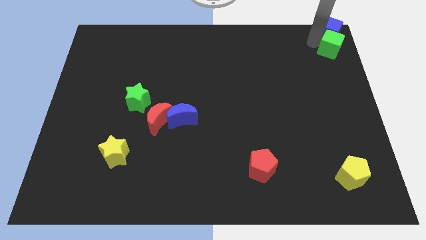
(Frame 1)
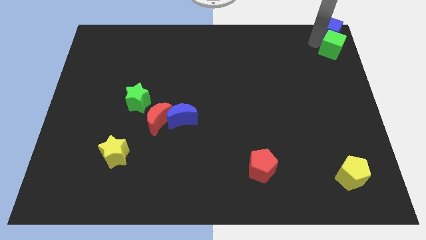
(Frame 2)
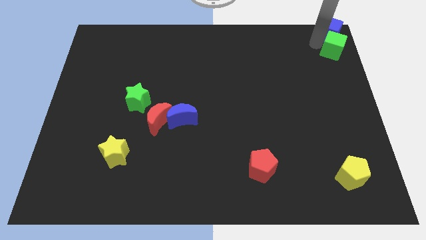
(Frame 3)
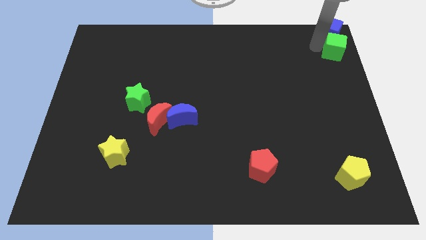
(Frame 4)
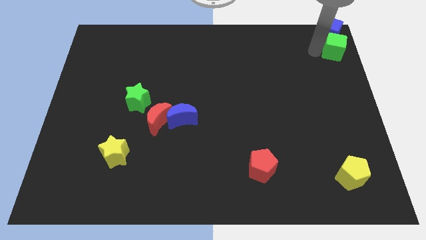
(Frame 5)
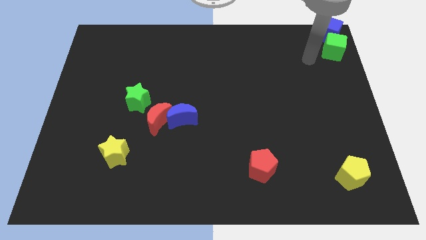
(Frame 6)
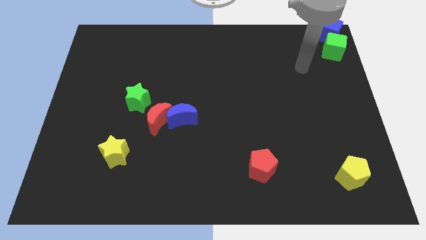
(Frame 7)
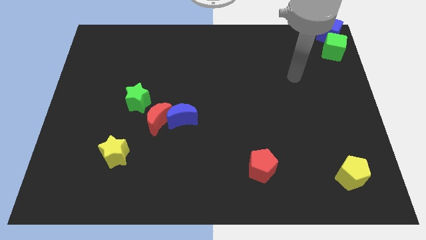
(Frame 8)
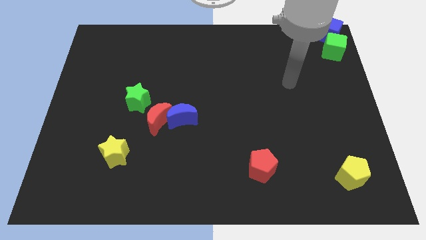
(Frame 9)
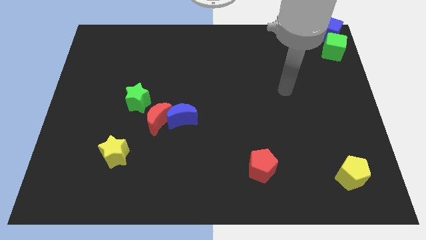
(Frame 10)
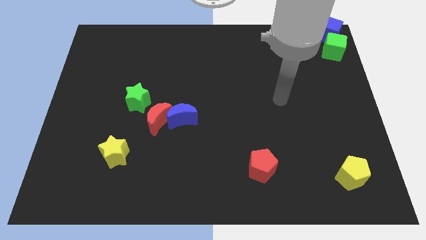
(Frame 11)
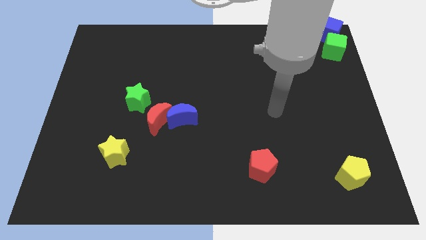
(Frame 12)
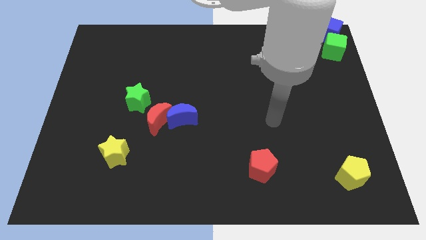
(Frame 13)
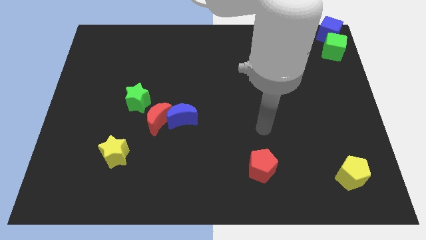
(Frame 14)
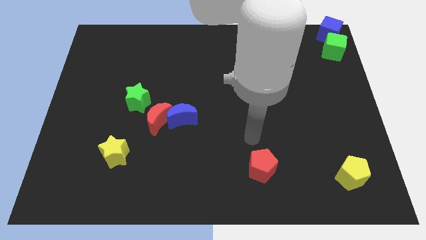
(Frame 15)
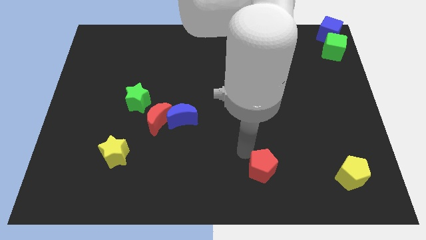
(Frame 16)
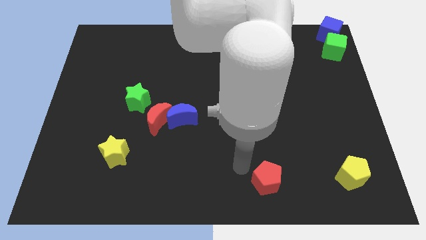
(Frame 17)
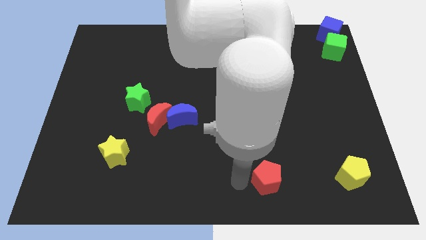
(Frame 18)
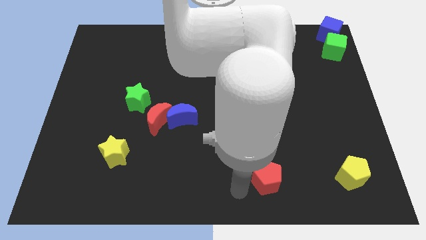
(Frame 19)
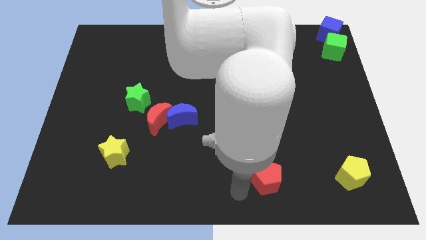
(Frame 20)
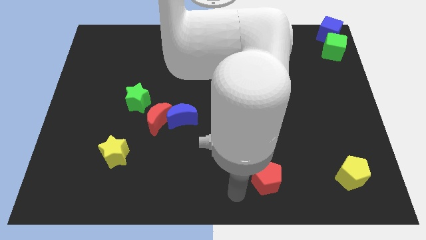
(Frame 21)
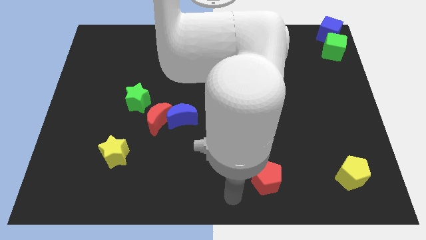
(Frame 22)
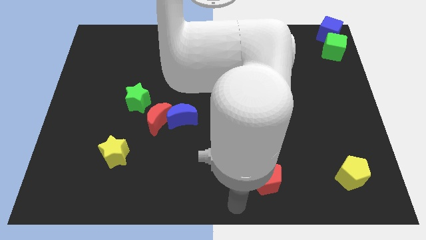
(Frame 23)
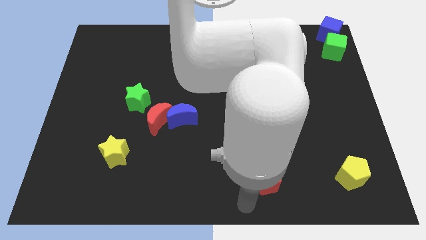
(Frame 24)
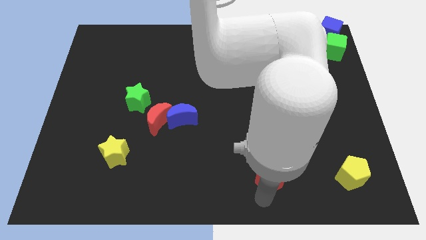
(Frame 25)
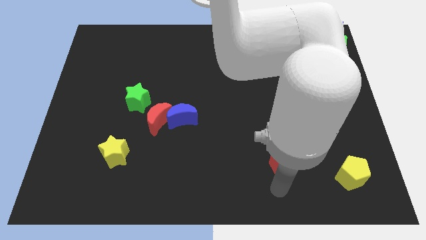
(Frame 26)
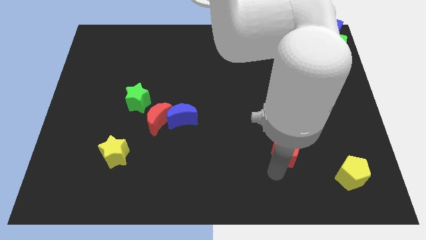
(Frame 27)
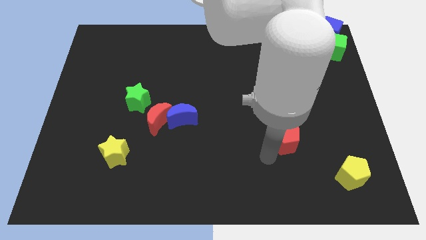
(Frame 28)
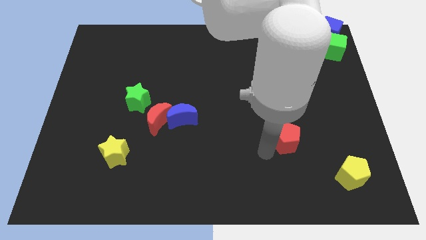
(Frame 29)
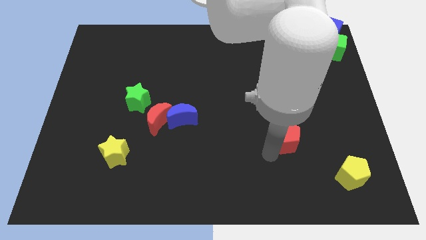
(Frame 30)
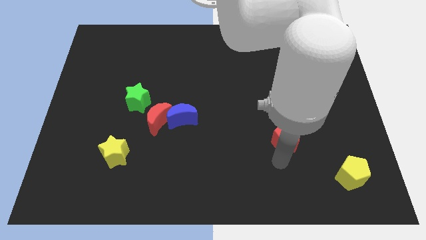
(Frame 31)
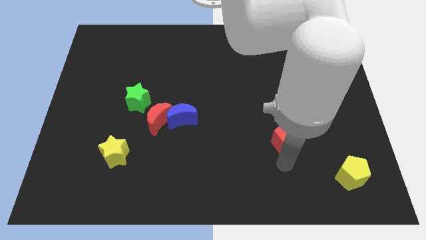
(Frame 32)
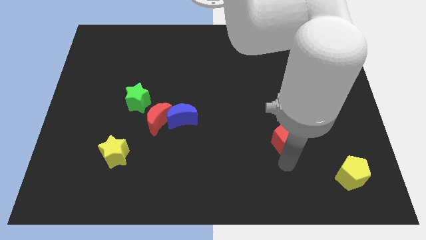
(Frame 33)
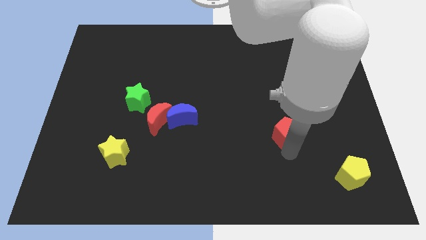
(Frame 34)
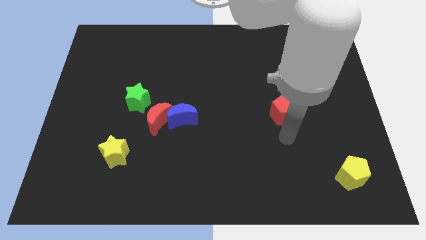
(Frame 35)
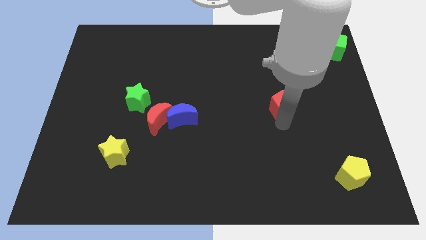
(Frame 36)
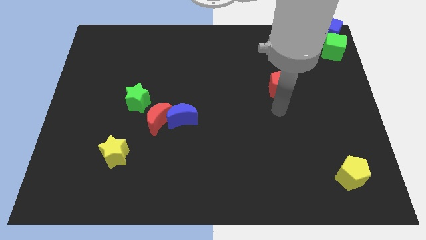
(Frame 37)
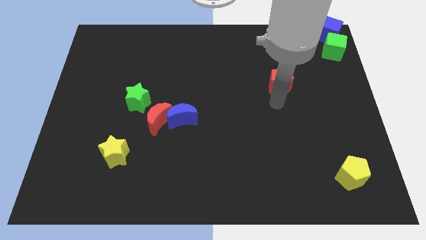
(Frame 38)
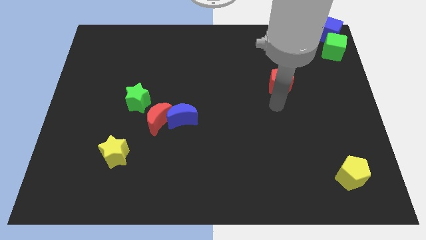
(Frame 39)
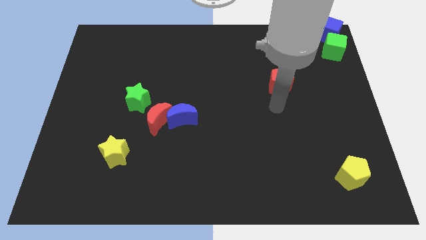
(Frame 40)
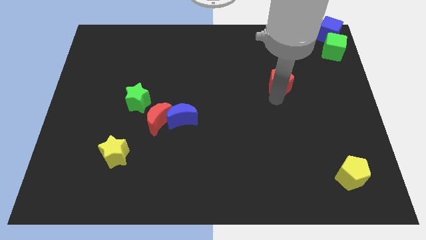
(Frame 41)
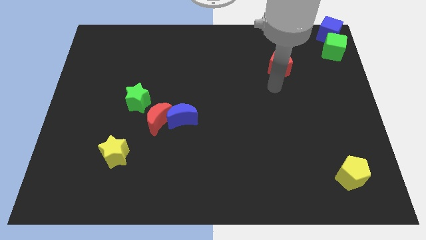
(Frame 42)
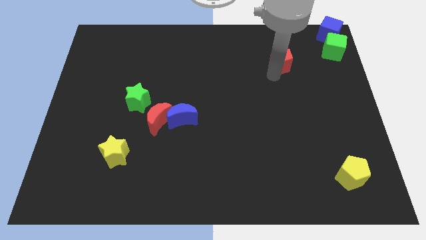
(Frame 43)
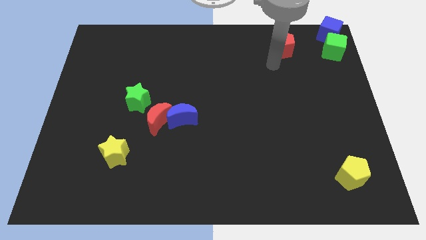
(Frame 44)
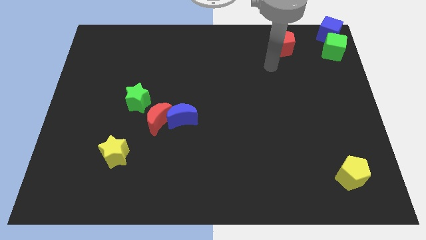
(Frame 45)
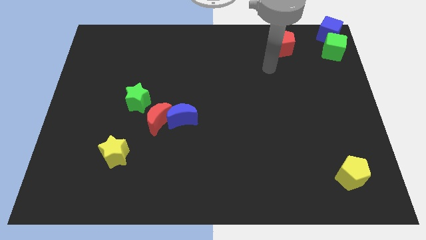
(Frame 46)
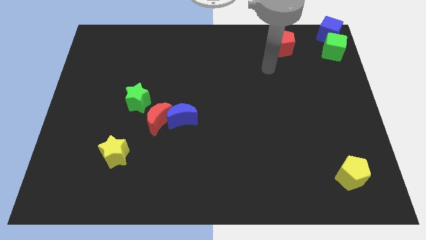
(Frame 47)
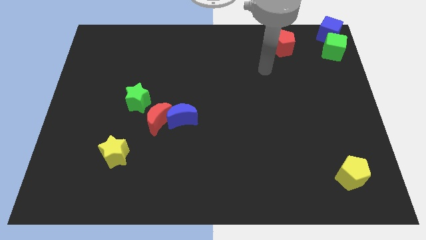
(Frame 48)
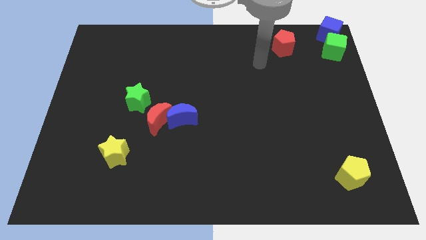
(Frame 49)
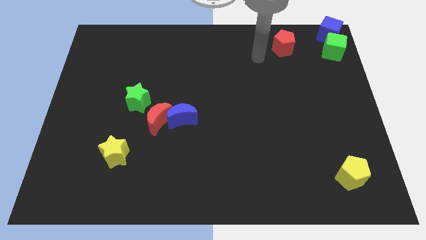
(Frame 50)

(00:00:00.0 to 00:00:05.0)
move the red pentagon to the top right of the board

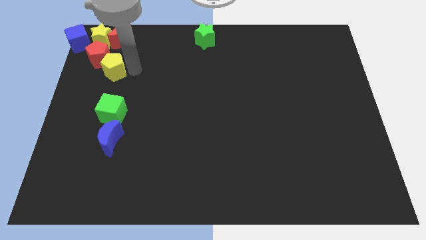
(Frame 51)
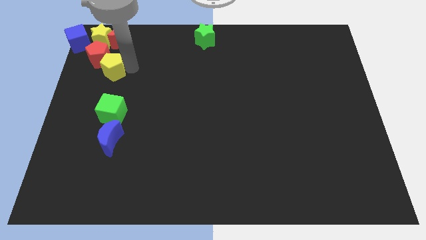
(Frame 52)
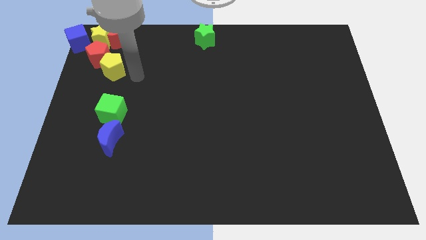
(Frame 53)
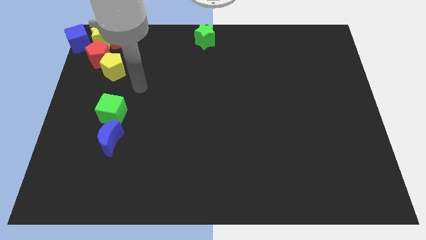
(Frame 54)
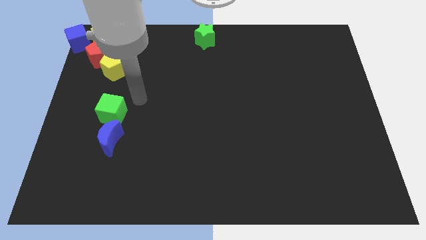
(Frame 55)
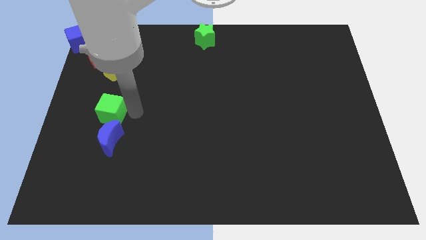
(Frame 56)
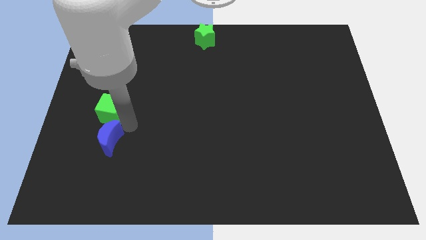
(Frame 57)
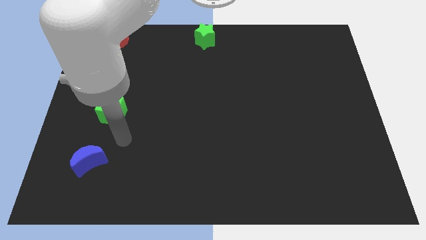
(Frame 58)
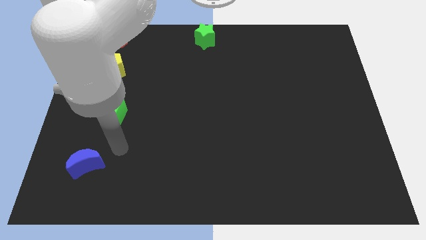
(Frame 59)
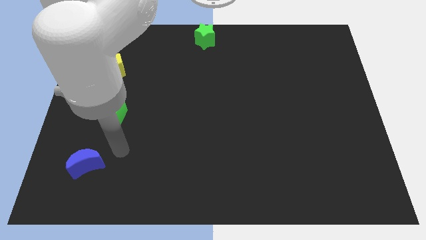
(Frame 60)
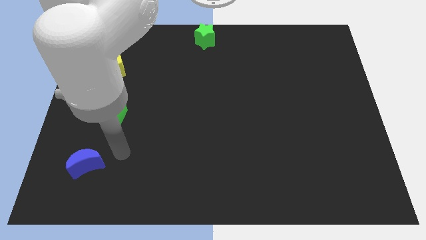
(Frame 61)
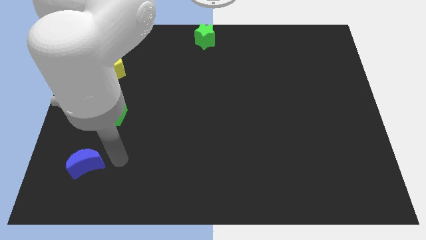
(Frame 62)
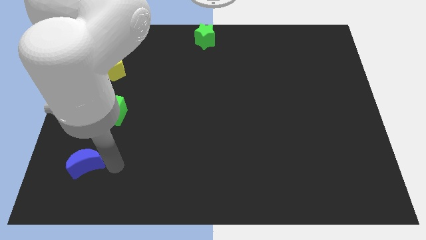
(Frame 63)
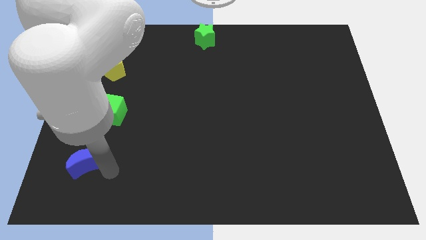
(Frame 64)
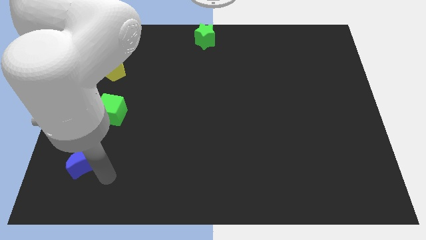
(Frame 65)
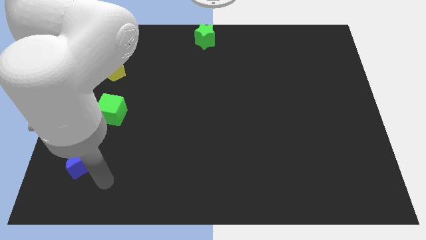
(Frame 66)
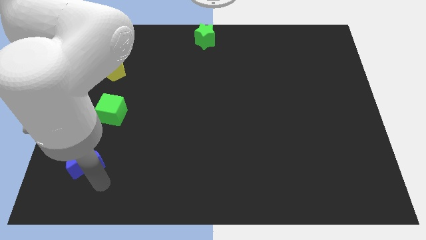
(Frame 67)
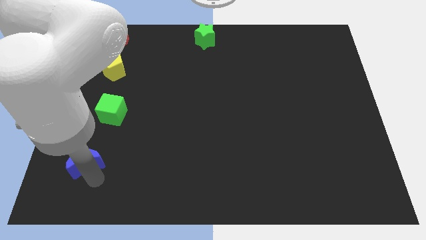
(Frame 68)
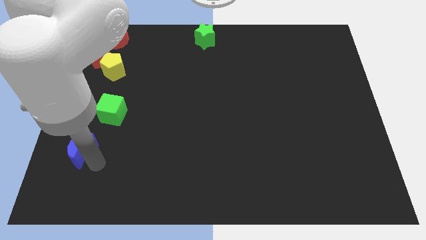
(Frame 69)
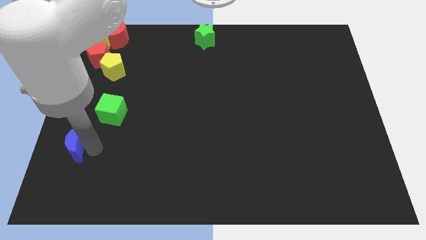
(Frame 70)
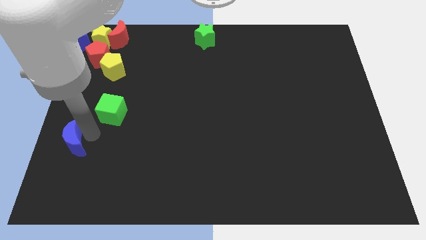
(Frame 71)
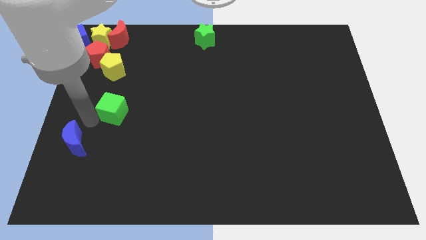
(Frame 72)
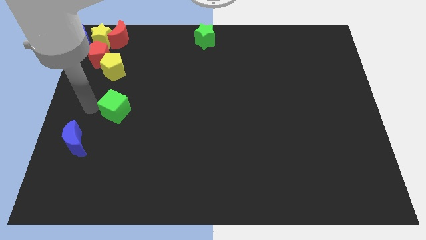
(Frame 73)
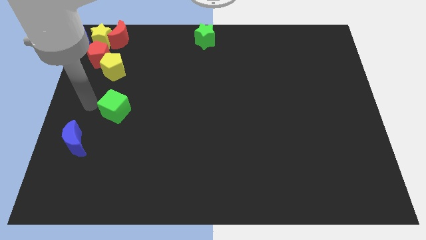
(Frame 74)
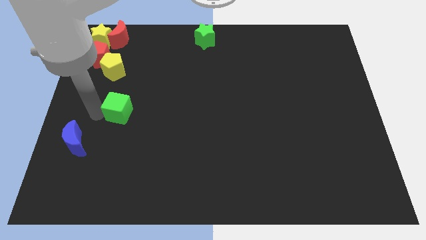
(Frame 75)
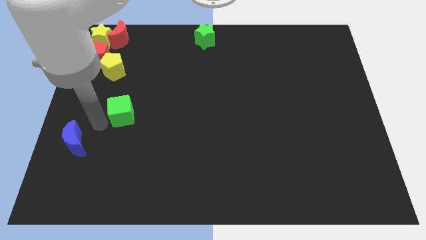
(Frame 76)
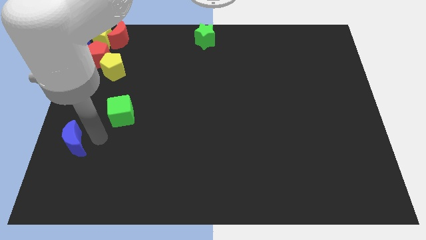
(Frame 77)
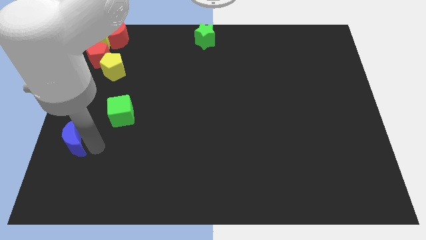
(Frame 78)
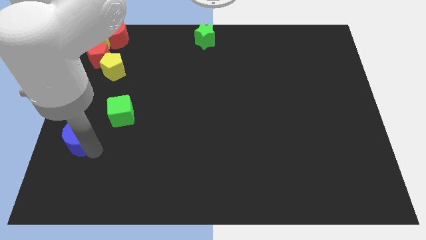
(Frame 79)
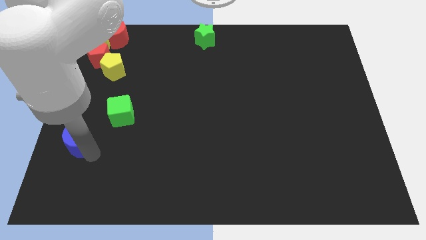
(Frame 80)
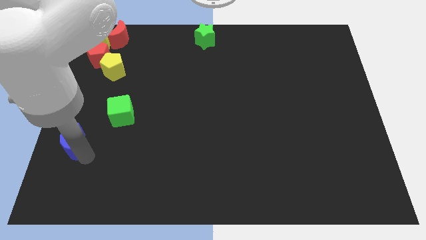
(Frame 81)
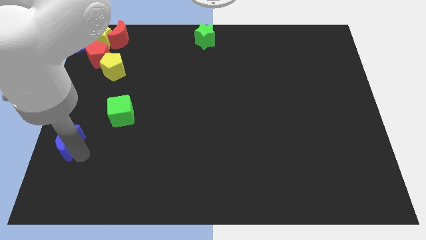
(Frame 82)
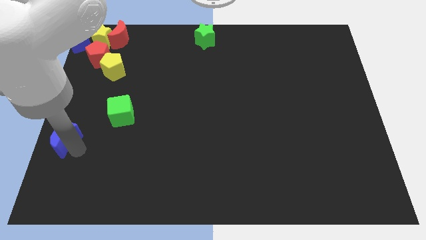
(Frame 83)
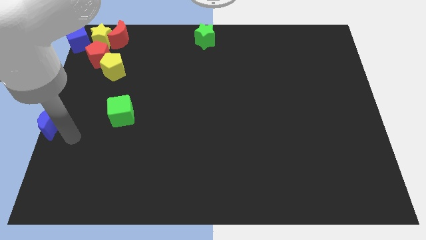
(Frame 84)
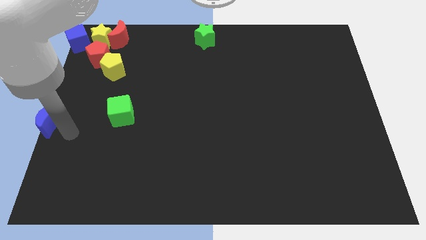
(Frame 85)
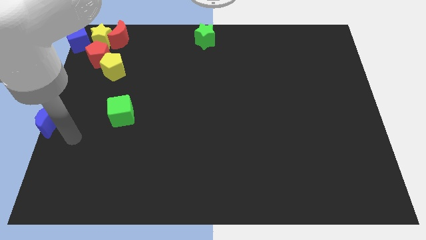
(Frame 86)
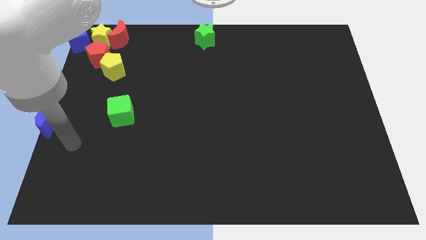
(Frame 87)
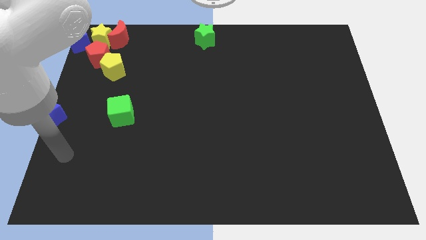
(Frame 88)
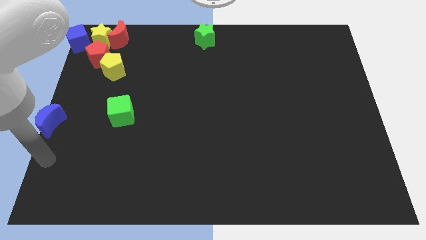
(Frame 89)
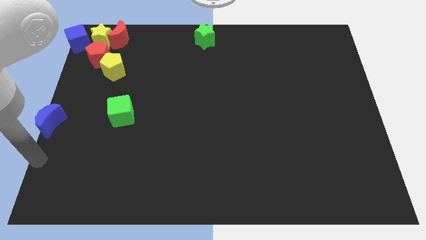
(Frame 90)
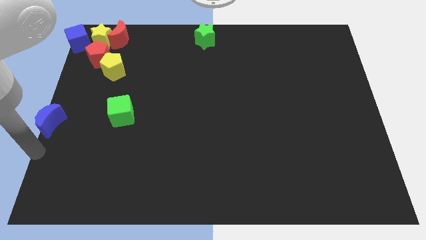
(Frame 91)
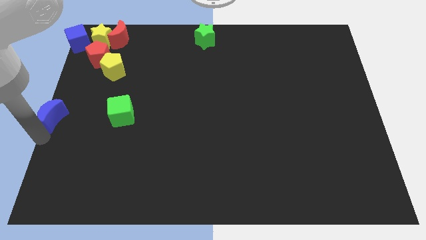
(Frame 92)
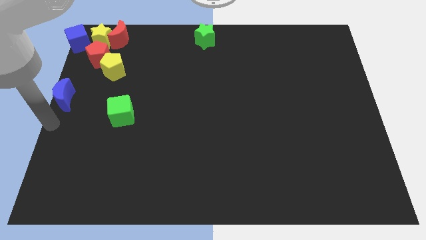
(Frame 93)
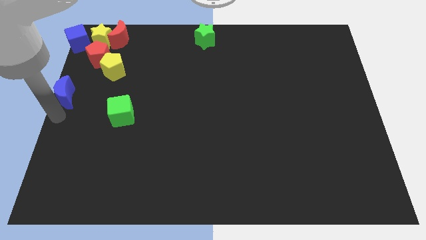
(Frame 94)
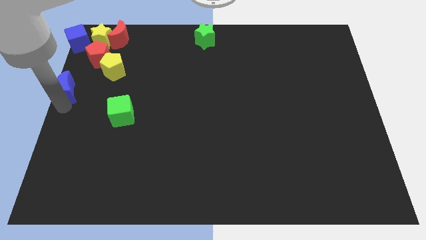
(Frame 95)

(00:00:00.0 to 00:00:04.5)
move the blue crescent at the left center of the board
